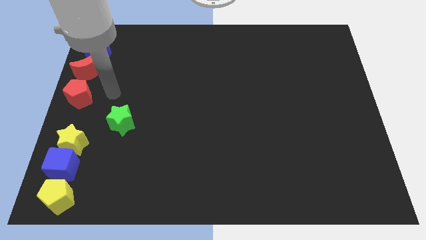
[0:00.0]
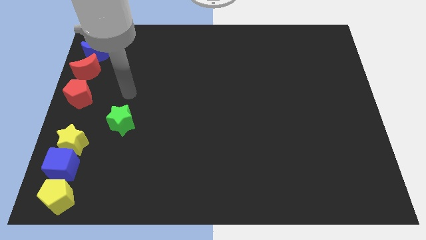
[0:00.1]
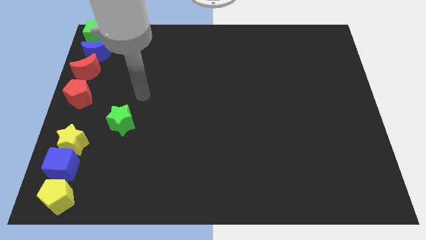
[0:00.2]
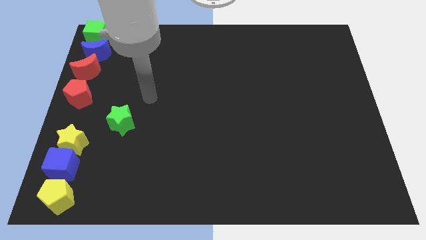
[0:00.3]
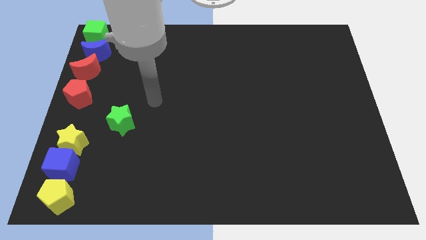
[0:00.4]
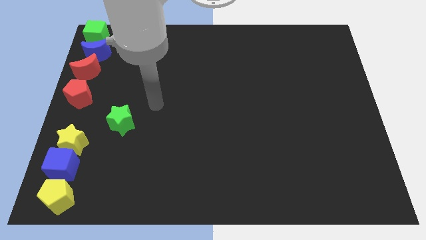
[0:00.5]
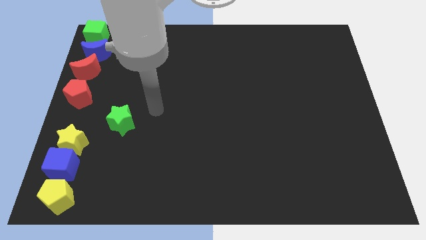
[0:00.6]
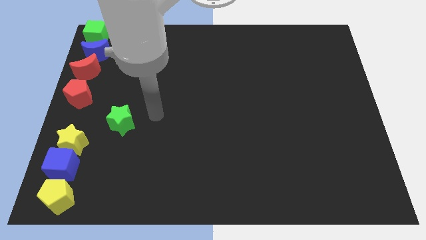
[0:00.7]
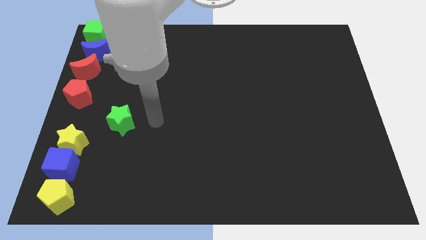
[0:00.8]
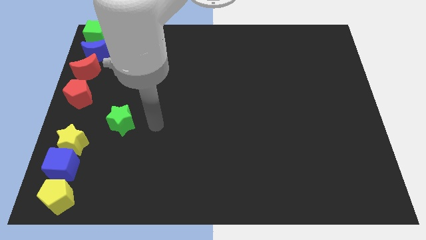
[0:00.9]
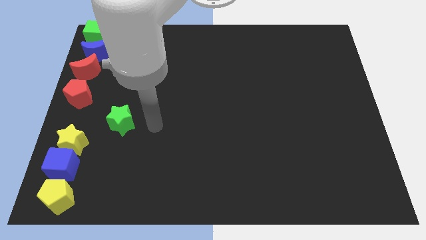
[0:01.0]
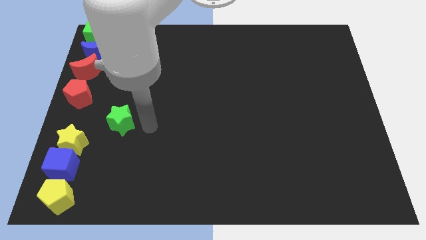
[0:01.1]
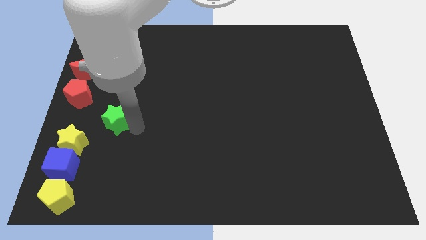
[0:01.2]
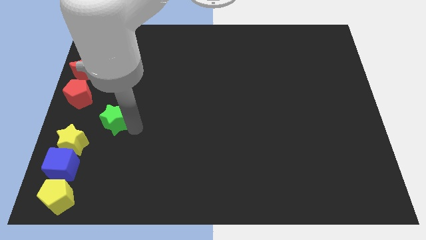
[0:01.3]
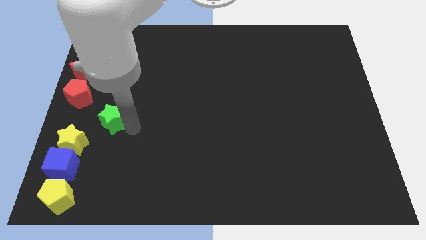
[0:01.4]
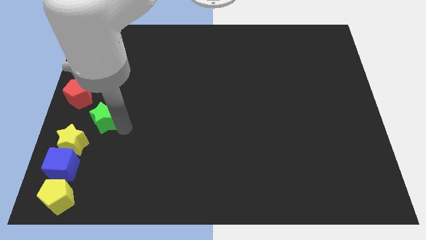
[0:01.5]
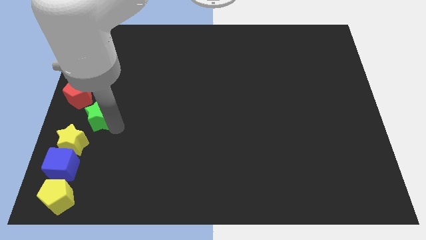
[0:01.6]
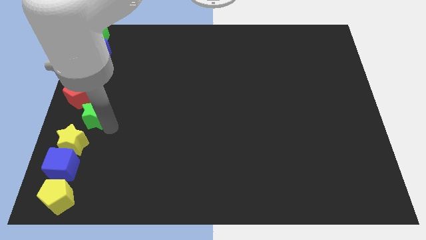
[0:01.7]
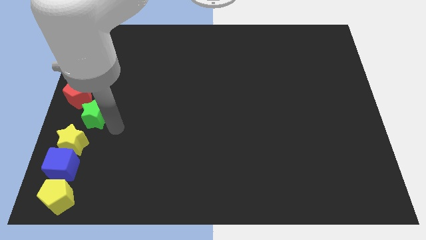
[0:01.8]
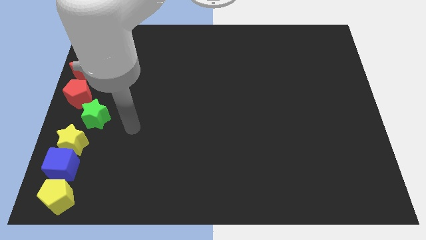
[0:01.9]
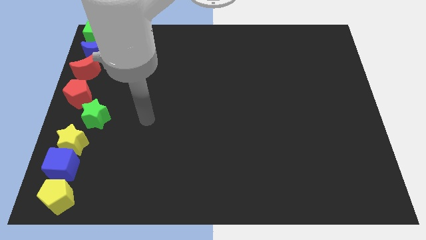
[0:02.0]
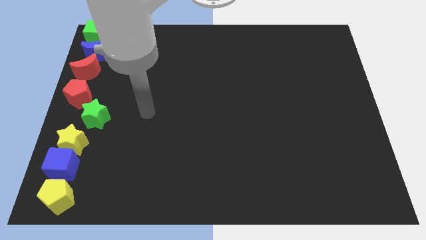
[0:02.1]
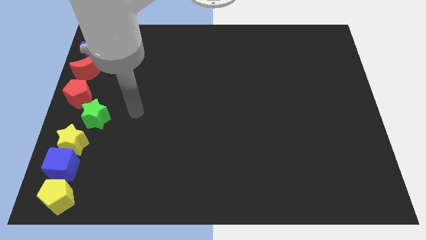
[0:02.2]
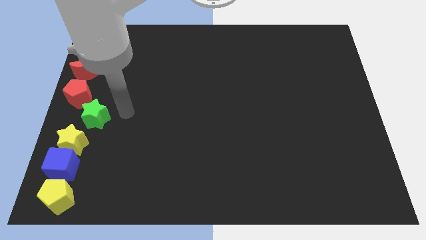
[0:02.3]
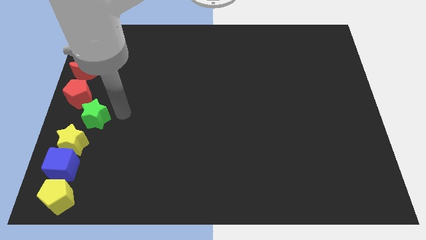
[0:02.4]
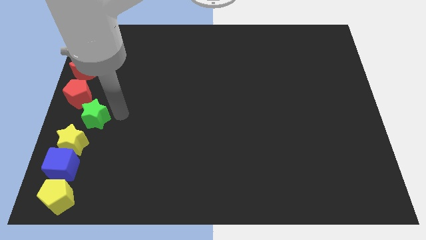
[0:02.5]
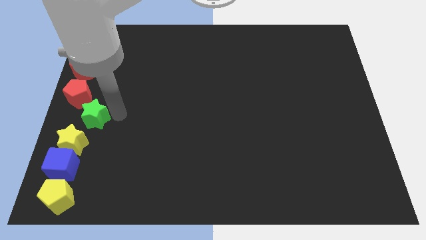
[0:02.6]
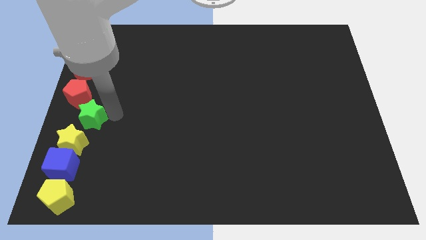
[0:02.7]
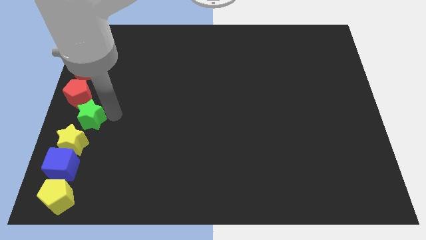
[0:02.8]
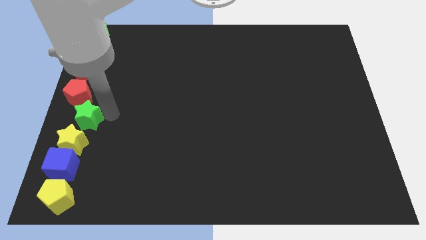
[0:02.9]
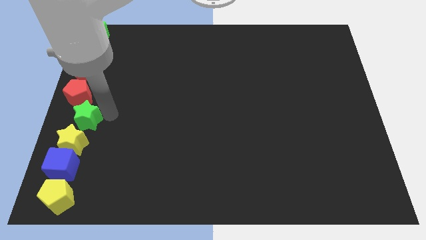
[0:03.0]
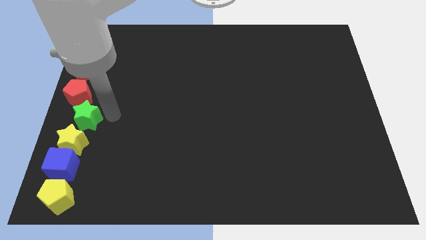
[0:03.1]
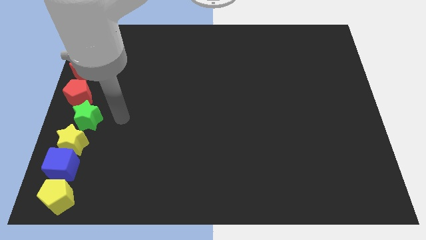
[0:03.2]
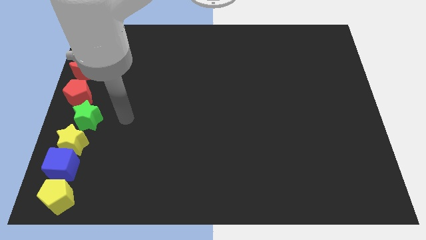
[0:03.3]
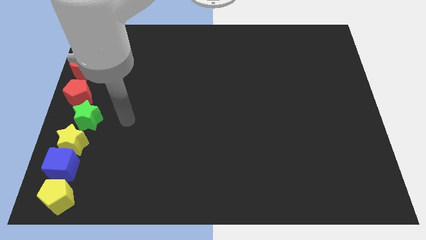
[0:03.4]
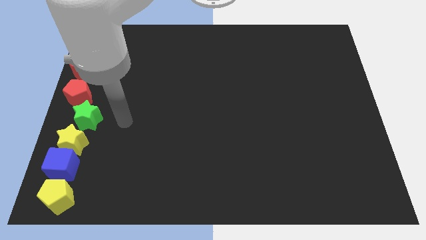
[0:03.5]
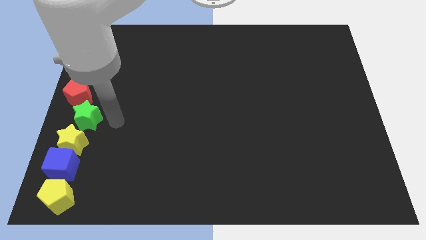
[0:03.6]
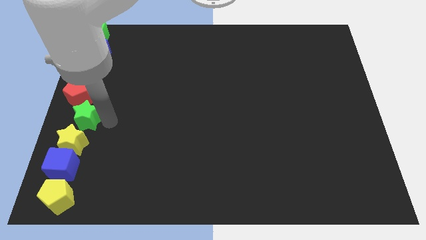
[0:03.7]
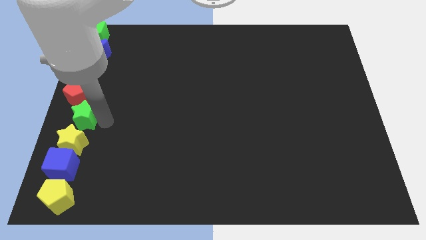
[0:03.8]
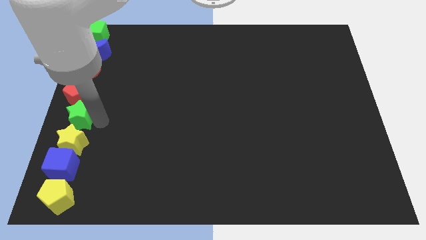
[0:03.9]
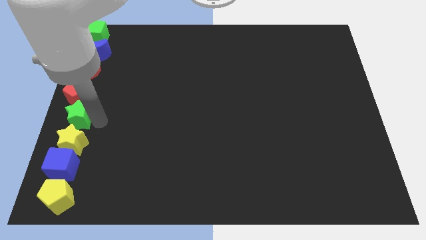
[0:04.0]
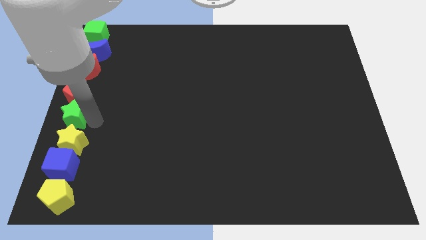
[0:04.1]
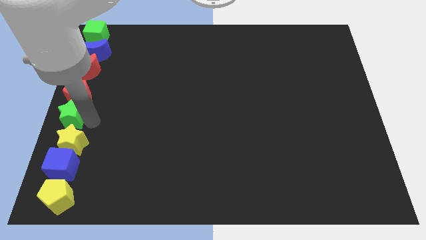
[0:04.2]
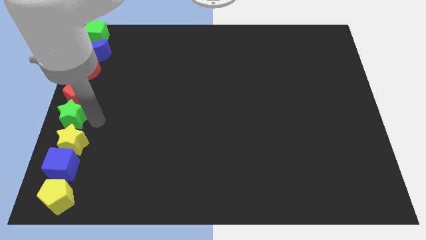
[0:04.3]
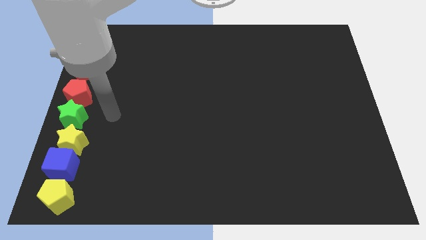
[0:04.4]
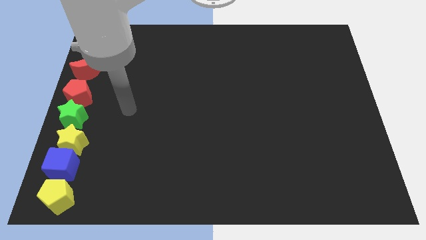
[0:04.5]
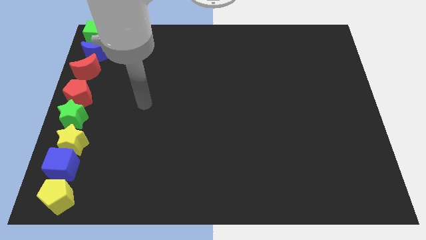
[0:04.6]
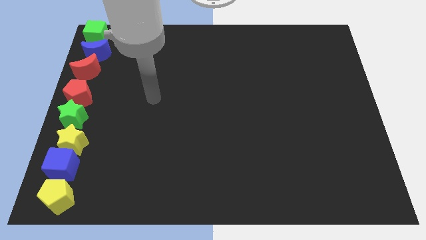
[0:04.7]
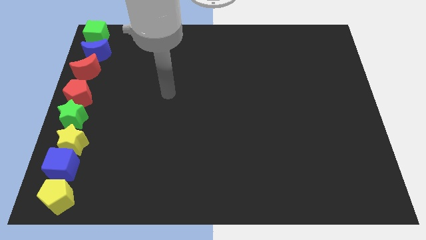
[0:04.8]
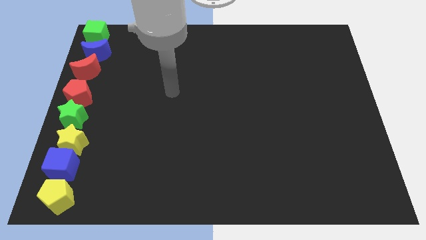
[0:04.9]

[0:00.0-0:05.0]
move the green star between red pentagon and yellow star

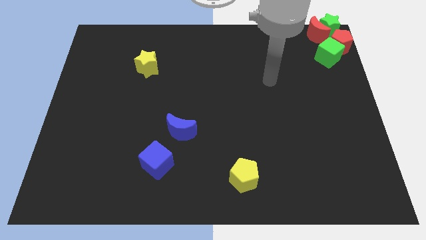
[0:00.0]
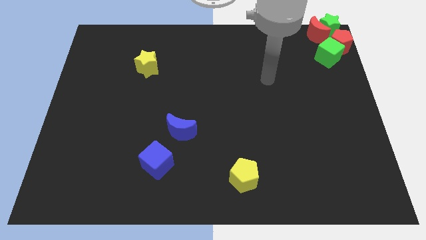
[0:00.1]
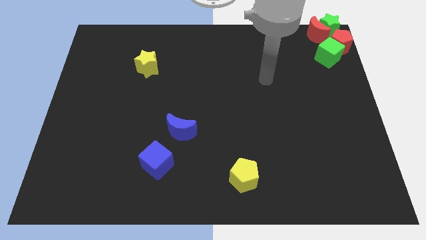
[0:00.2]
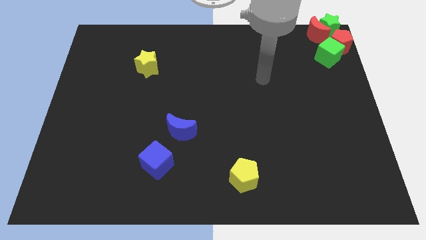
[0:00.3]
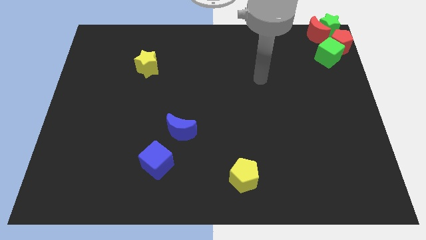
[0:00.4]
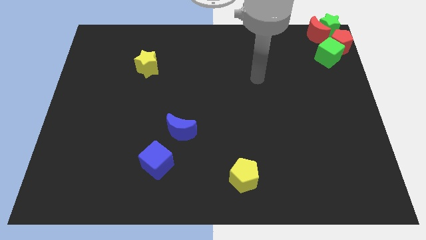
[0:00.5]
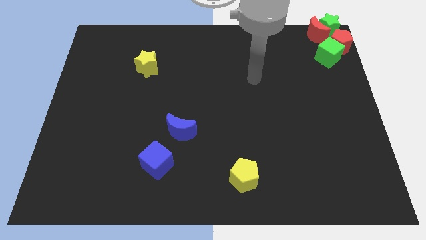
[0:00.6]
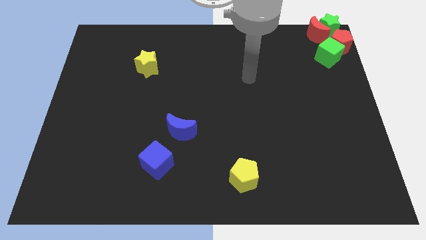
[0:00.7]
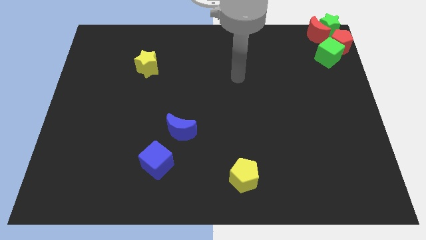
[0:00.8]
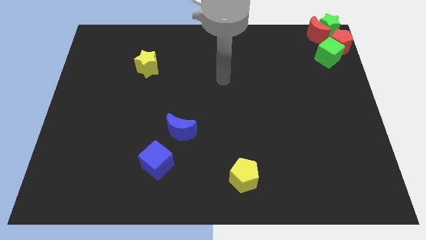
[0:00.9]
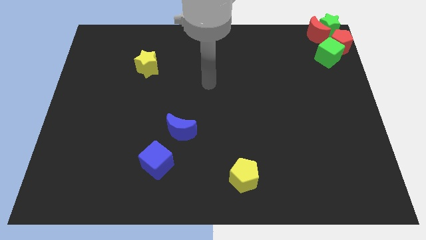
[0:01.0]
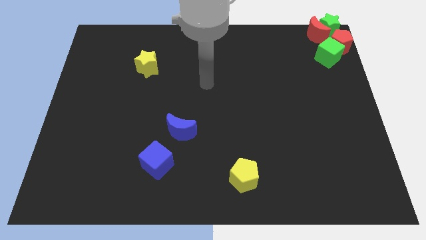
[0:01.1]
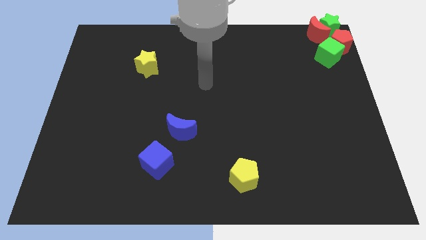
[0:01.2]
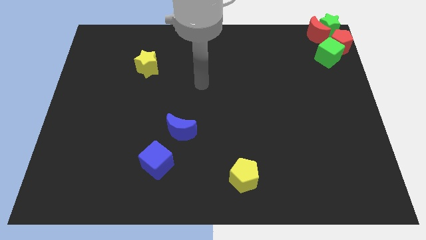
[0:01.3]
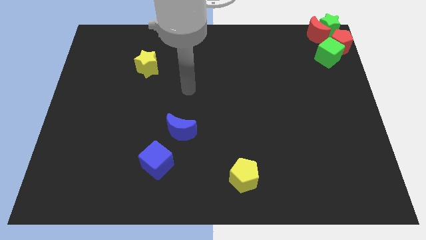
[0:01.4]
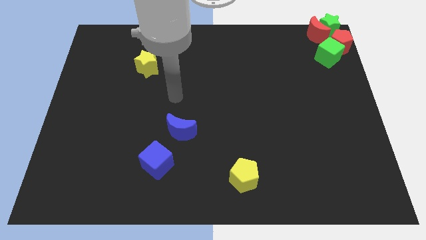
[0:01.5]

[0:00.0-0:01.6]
move the arm on the top of the blue moon vertically

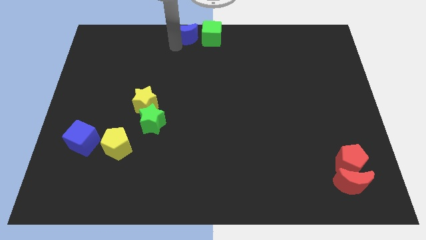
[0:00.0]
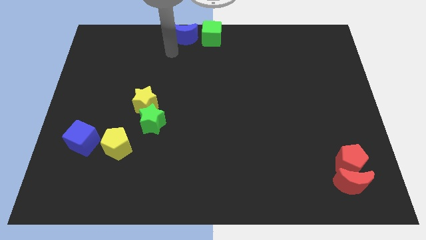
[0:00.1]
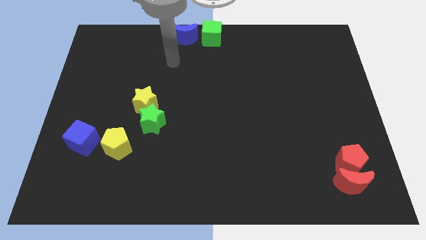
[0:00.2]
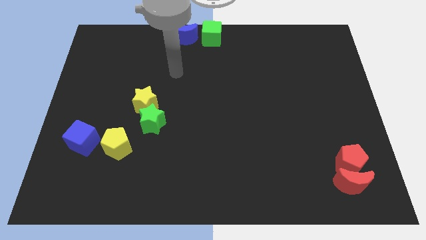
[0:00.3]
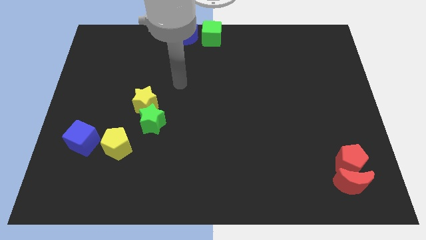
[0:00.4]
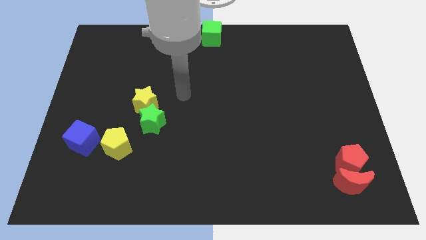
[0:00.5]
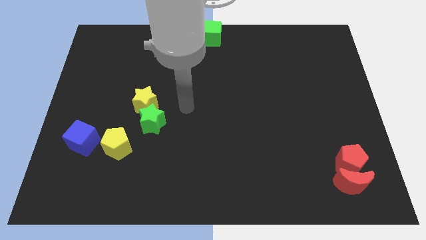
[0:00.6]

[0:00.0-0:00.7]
move the arm away from the blue moon

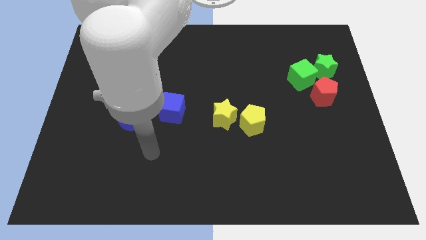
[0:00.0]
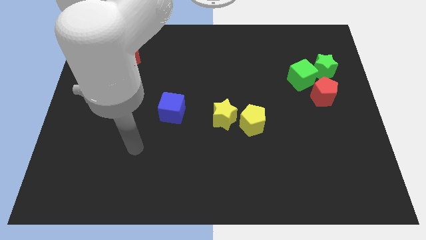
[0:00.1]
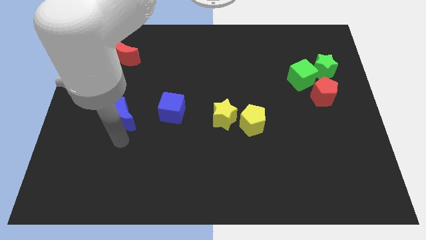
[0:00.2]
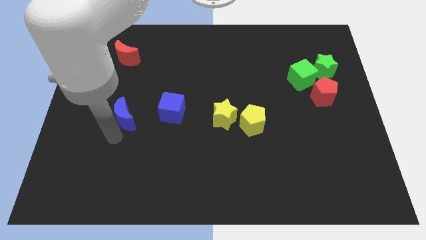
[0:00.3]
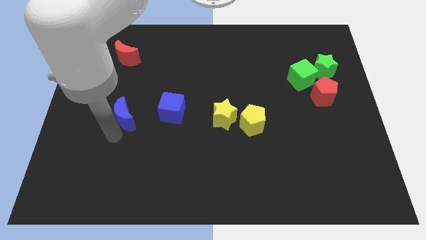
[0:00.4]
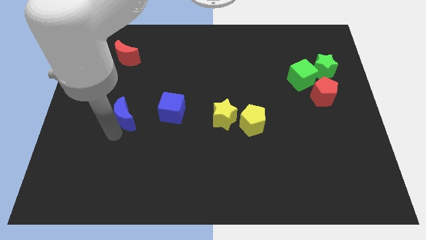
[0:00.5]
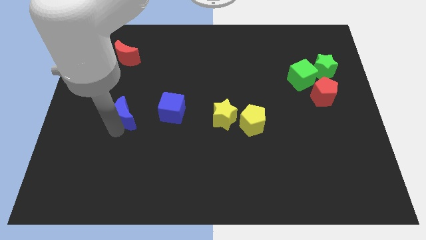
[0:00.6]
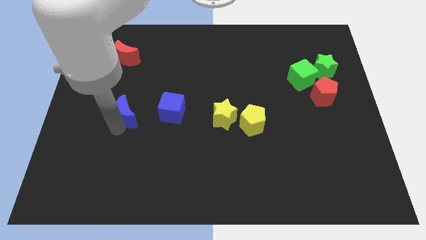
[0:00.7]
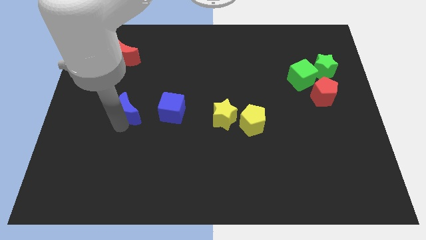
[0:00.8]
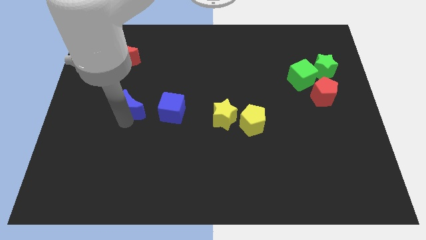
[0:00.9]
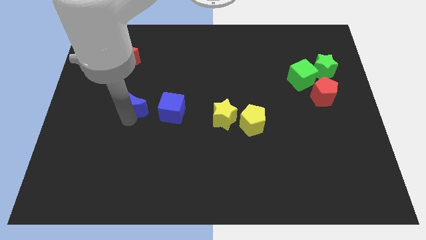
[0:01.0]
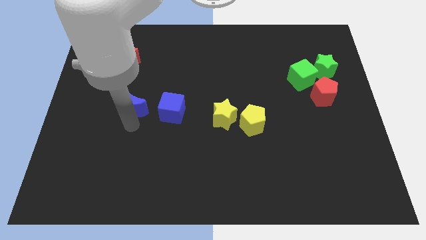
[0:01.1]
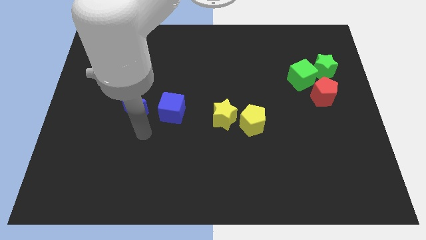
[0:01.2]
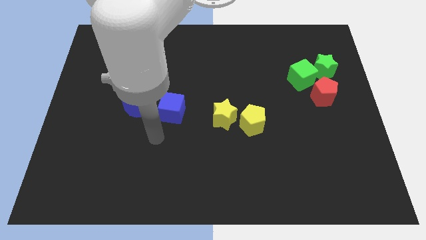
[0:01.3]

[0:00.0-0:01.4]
place the blue crescent to the left side of blue cube

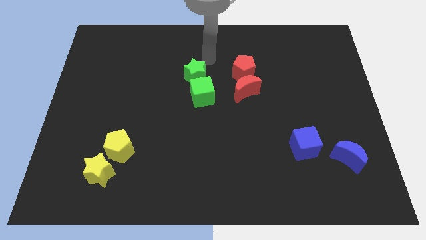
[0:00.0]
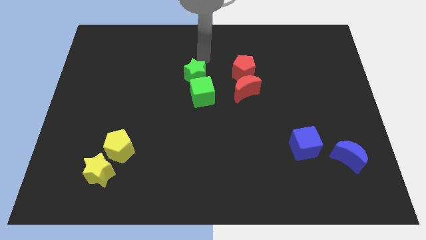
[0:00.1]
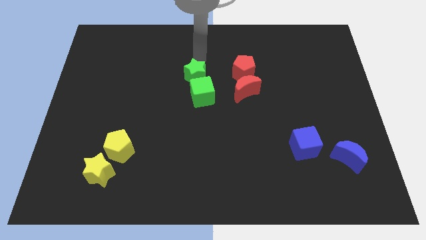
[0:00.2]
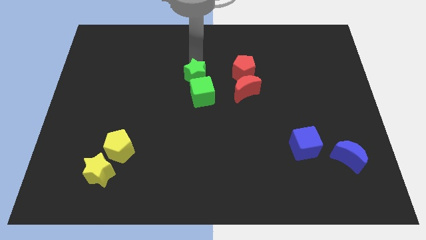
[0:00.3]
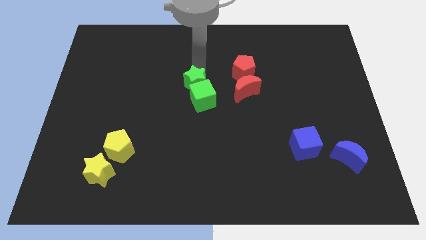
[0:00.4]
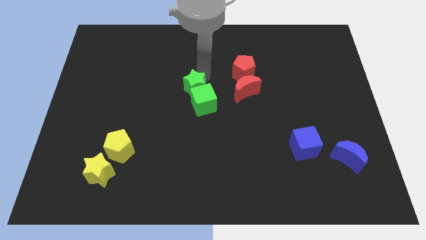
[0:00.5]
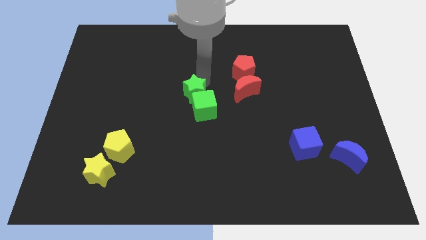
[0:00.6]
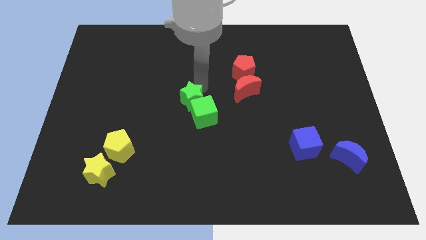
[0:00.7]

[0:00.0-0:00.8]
place both the green blocks at center of the board
